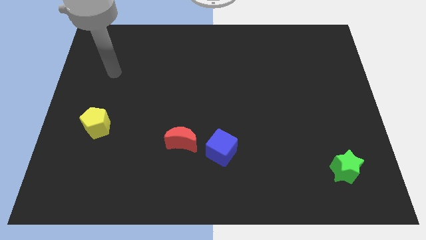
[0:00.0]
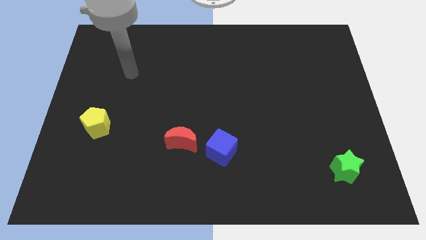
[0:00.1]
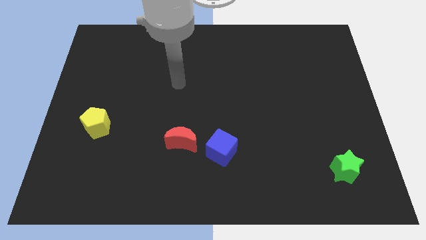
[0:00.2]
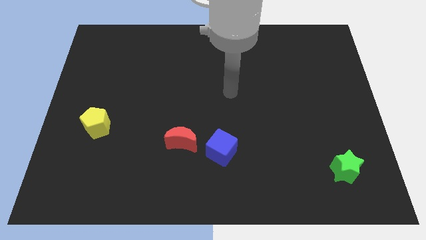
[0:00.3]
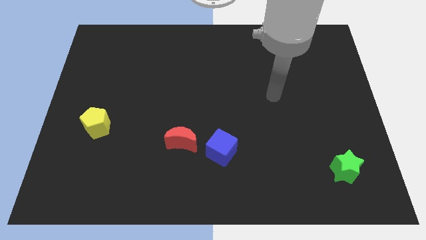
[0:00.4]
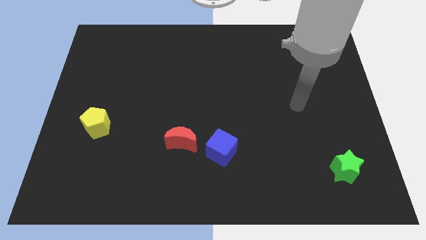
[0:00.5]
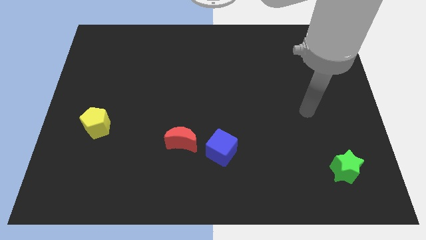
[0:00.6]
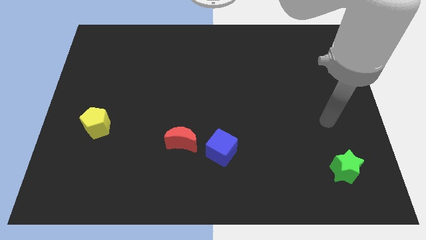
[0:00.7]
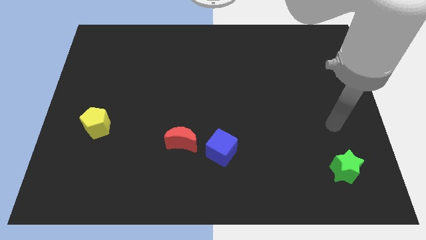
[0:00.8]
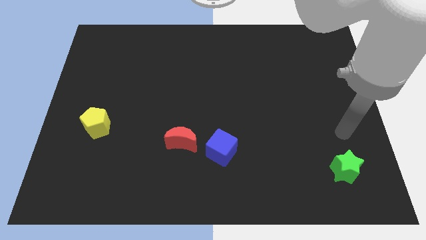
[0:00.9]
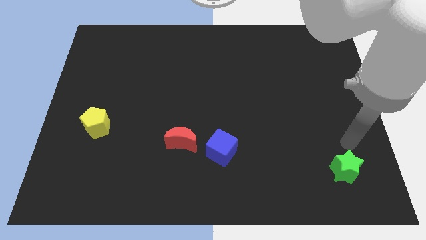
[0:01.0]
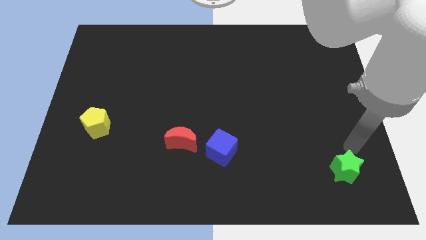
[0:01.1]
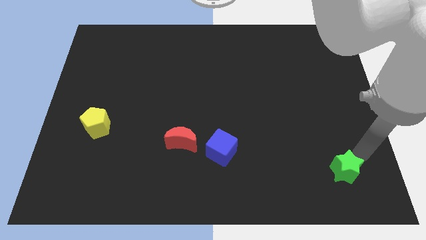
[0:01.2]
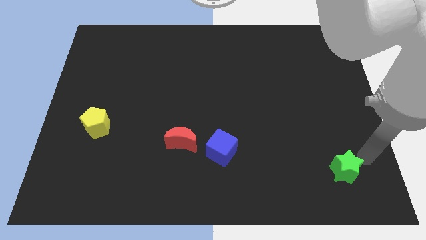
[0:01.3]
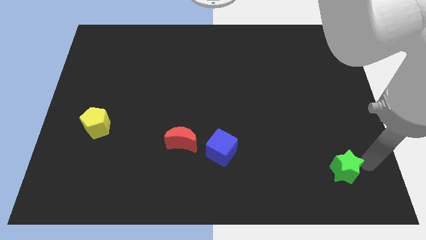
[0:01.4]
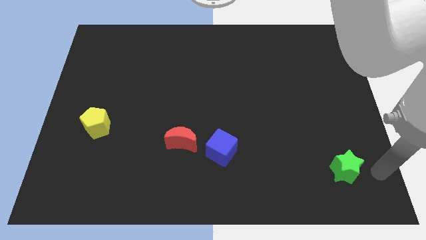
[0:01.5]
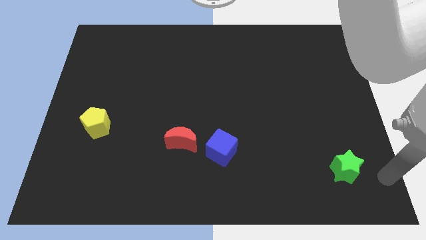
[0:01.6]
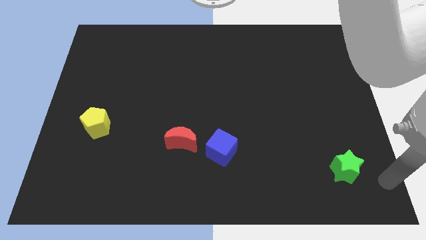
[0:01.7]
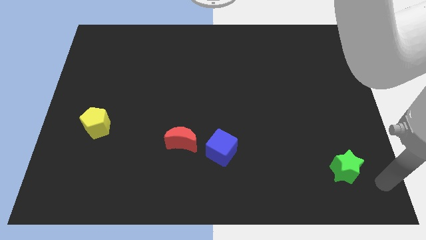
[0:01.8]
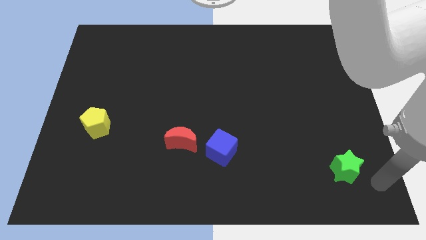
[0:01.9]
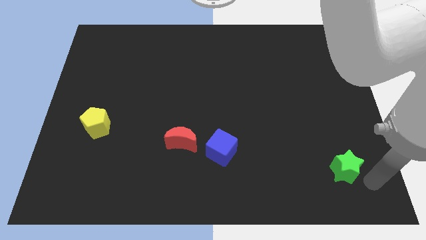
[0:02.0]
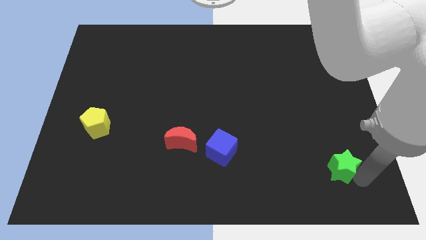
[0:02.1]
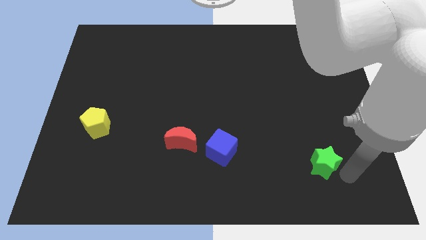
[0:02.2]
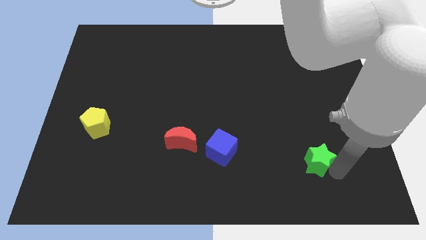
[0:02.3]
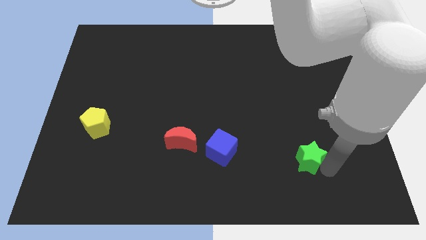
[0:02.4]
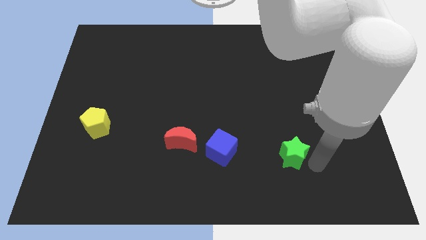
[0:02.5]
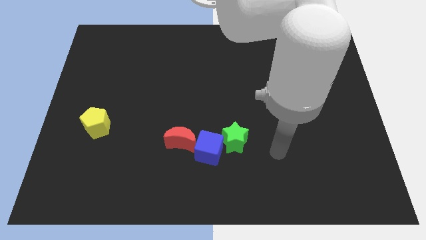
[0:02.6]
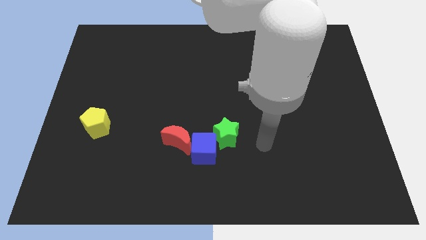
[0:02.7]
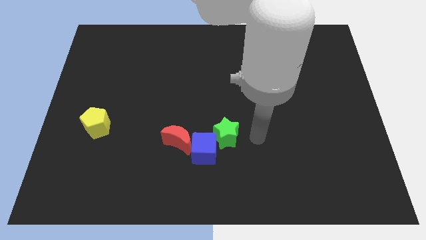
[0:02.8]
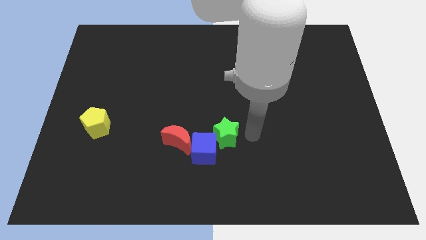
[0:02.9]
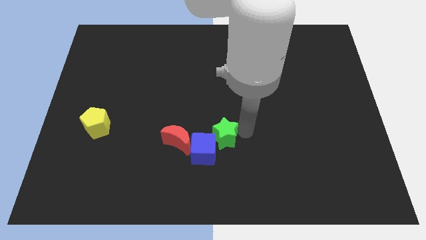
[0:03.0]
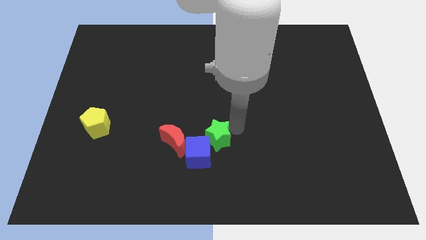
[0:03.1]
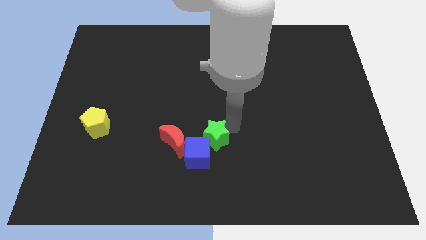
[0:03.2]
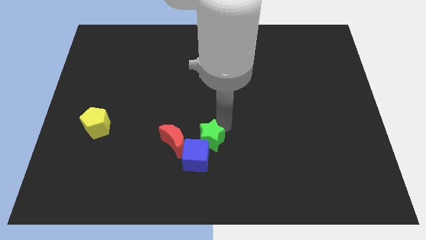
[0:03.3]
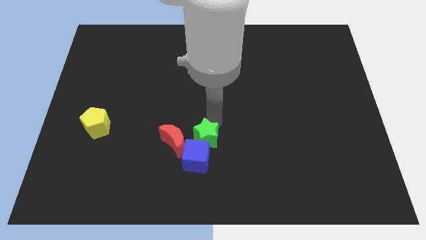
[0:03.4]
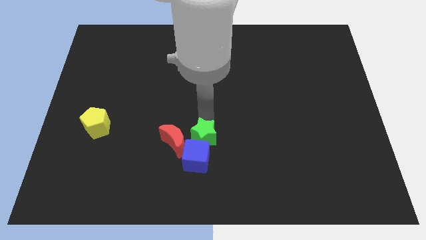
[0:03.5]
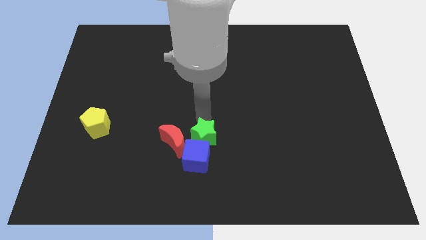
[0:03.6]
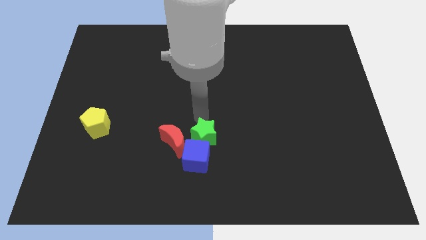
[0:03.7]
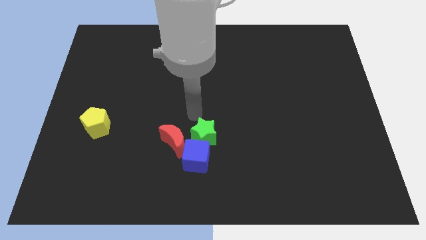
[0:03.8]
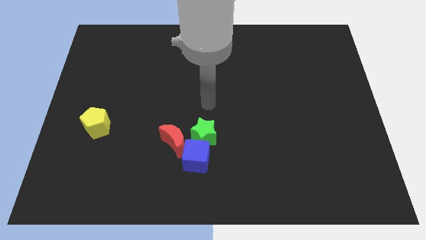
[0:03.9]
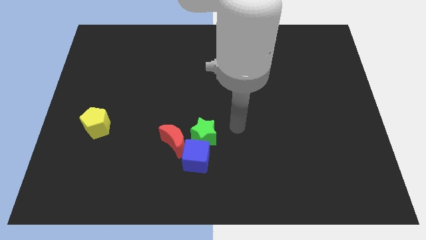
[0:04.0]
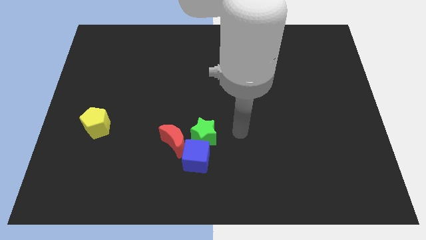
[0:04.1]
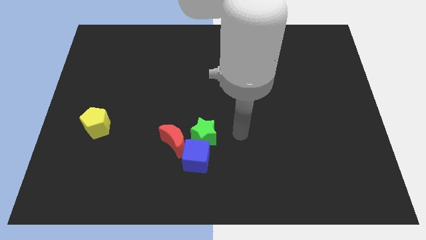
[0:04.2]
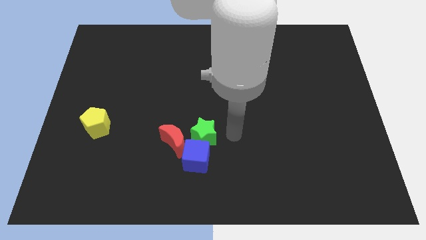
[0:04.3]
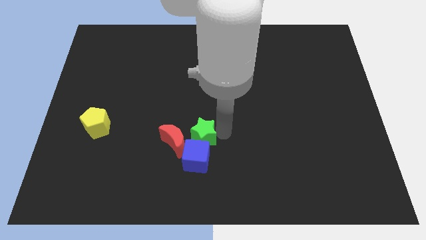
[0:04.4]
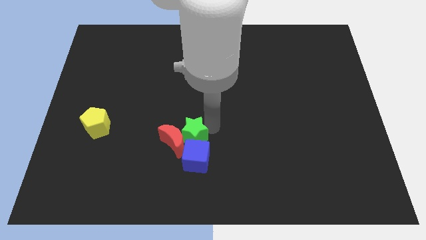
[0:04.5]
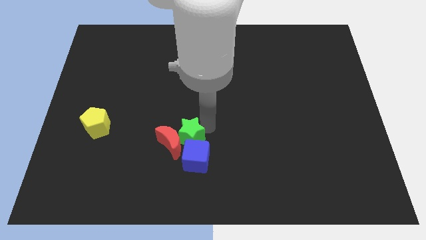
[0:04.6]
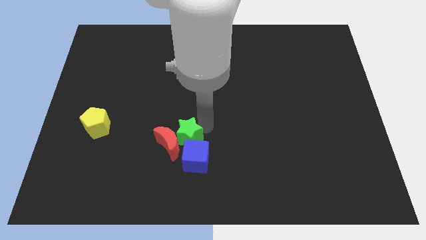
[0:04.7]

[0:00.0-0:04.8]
put the green star next to the red moon

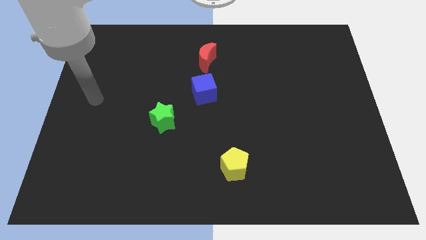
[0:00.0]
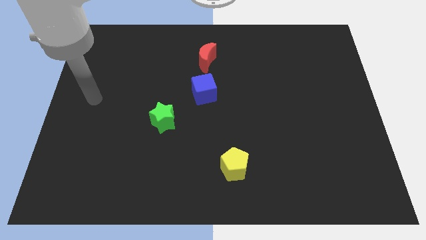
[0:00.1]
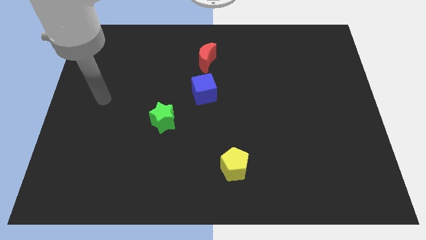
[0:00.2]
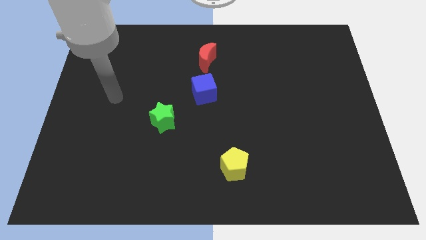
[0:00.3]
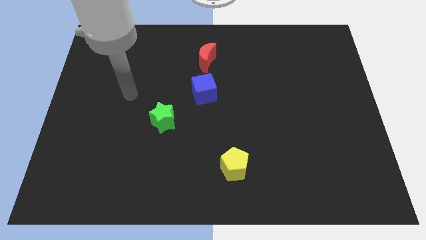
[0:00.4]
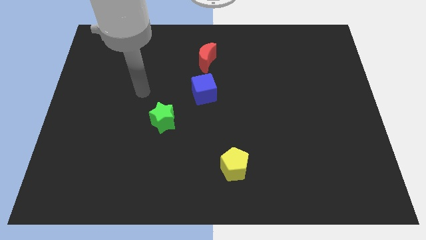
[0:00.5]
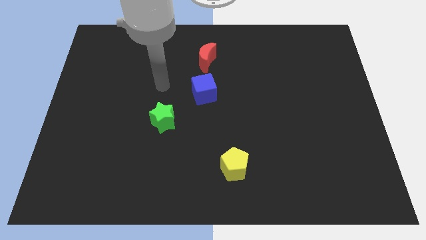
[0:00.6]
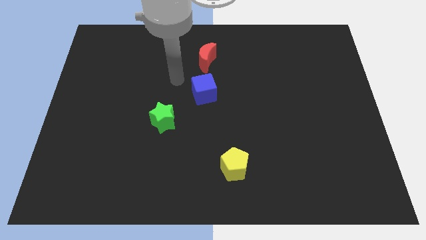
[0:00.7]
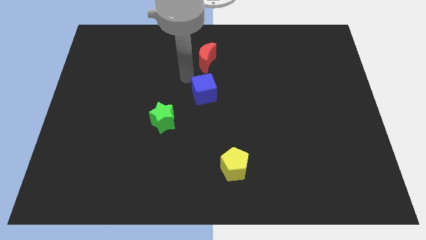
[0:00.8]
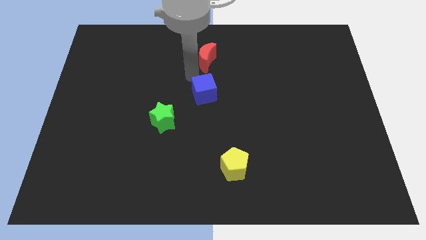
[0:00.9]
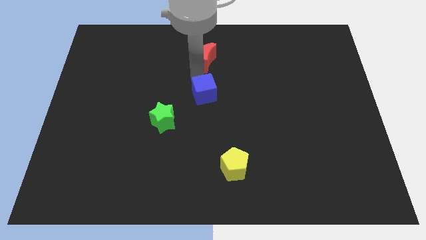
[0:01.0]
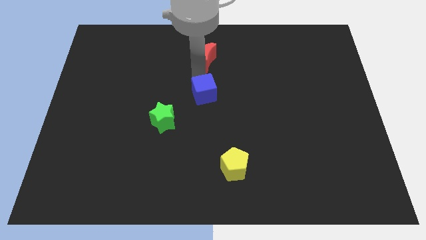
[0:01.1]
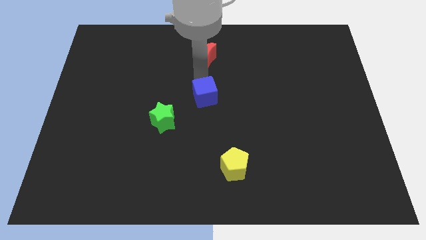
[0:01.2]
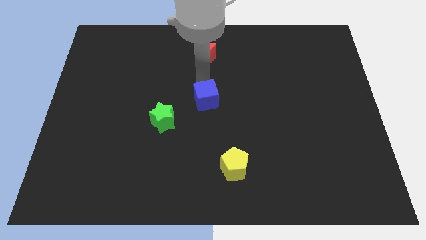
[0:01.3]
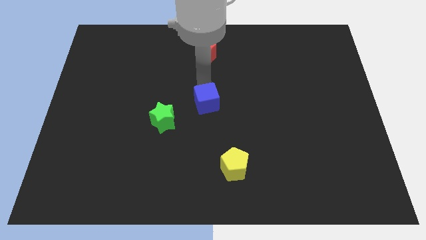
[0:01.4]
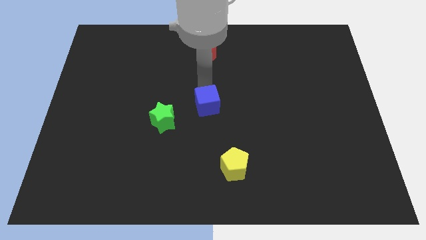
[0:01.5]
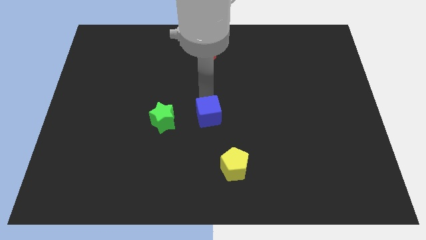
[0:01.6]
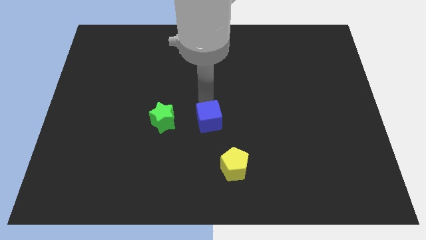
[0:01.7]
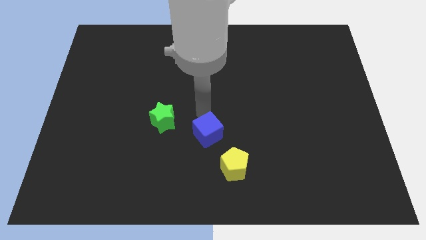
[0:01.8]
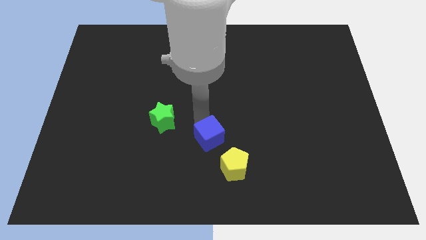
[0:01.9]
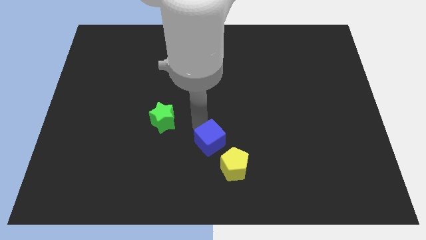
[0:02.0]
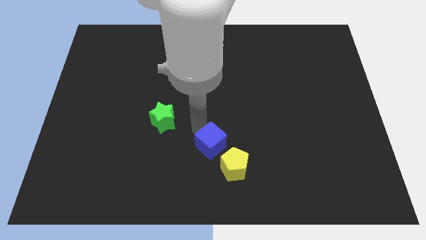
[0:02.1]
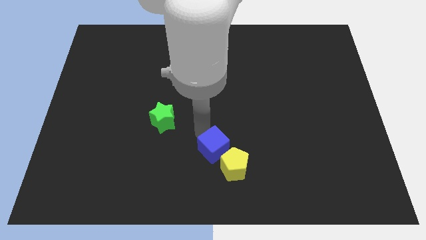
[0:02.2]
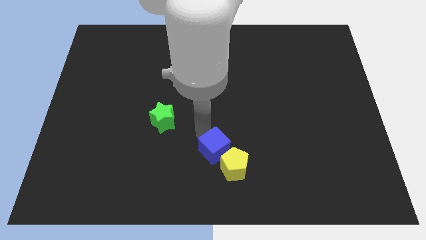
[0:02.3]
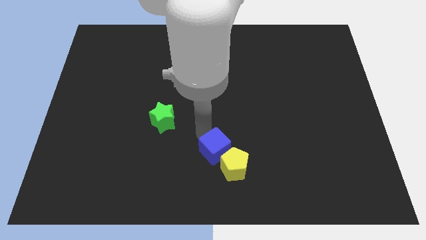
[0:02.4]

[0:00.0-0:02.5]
push the blue block close to the yellow pentagon

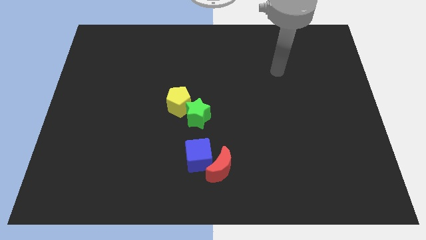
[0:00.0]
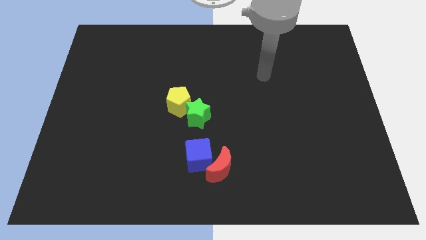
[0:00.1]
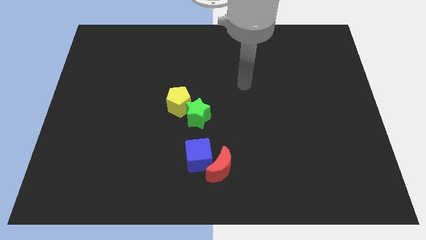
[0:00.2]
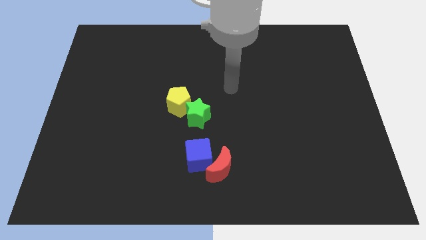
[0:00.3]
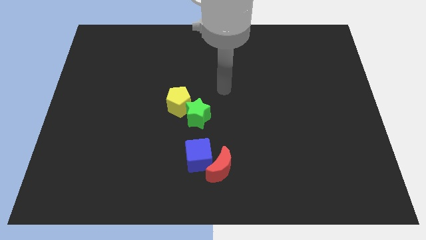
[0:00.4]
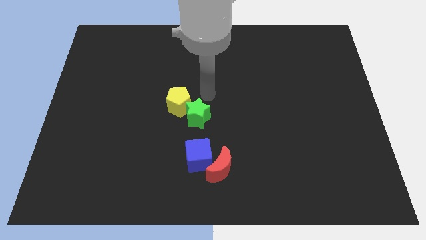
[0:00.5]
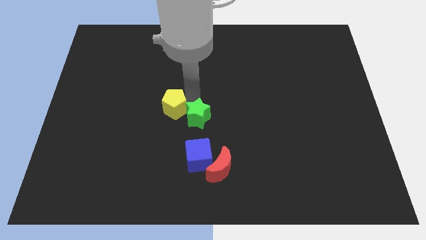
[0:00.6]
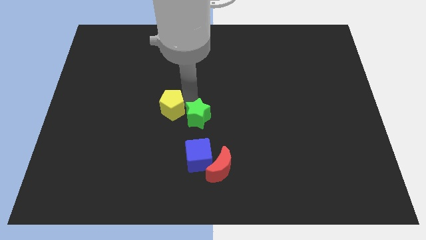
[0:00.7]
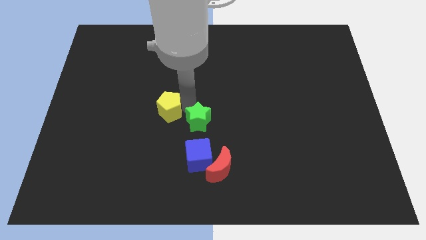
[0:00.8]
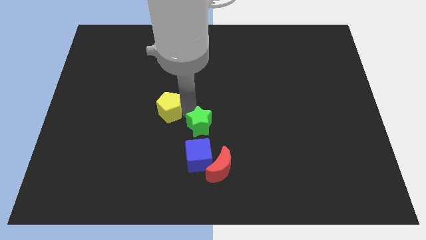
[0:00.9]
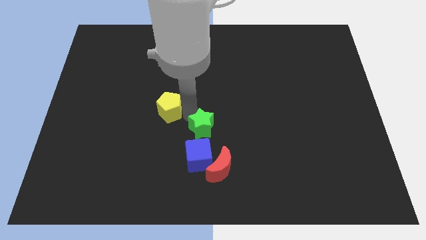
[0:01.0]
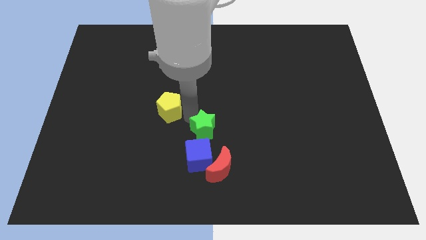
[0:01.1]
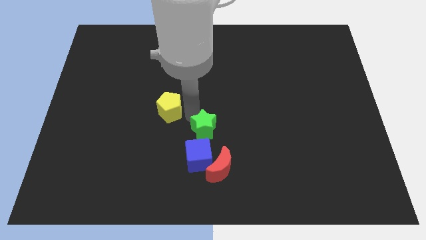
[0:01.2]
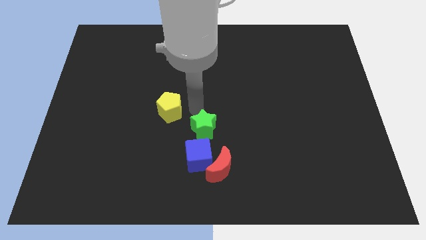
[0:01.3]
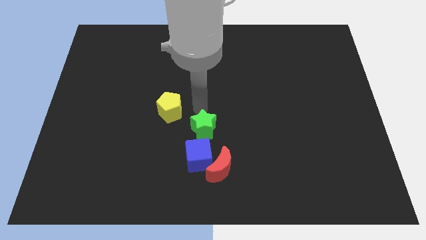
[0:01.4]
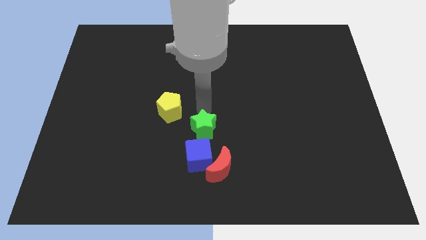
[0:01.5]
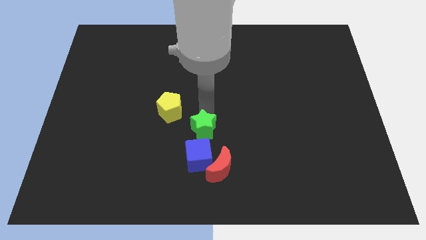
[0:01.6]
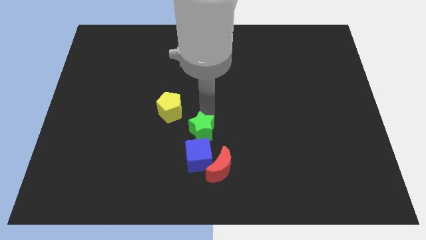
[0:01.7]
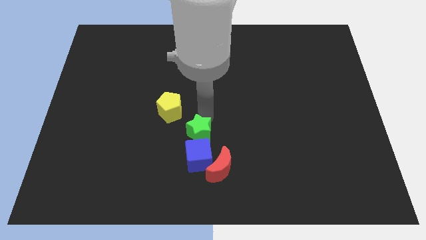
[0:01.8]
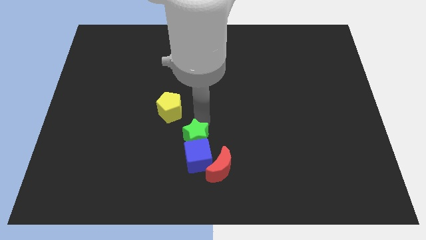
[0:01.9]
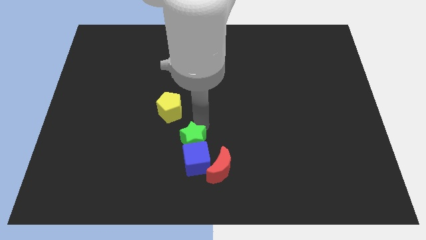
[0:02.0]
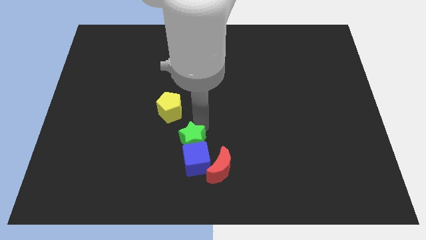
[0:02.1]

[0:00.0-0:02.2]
push the green block towards the cube
